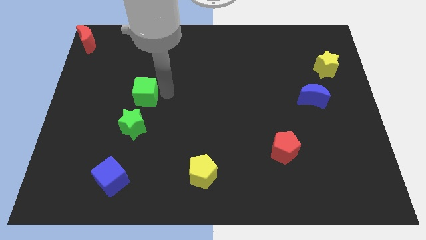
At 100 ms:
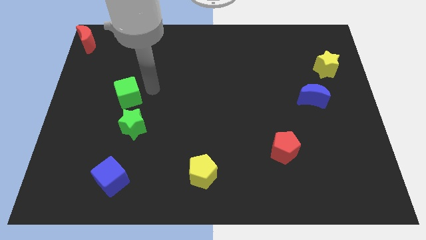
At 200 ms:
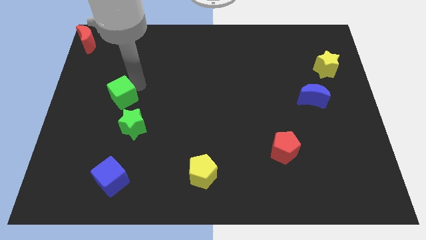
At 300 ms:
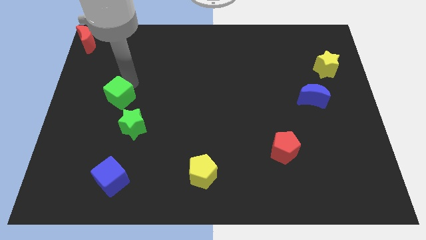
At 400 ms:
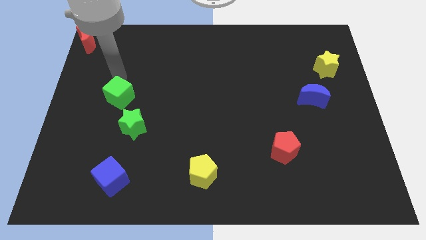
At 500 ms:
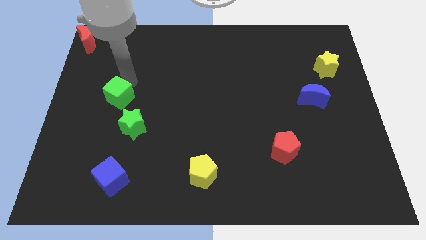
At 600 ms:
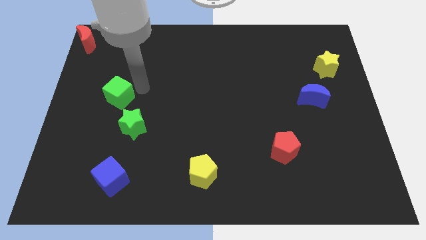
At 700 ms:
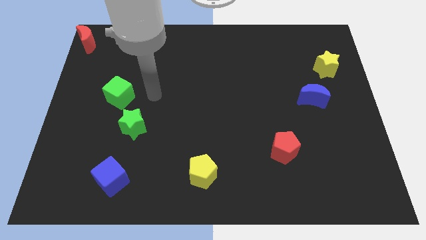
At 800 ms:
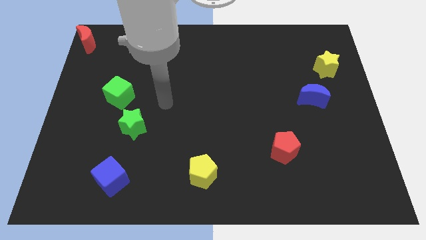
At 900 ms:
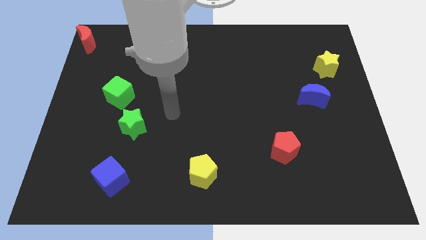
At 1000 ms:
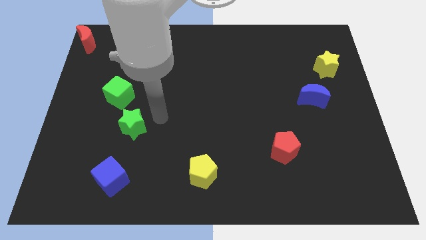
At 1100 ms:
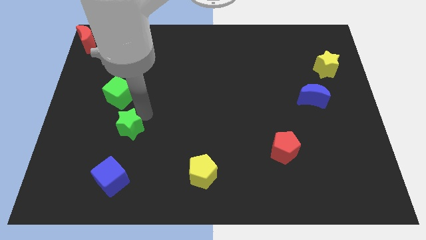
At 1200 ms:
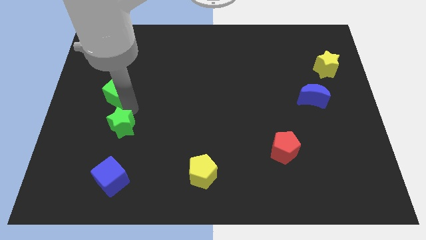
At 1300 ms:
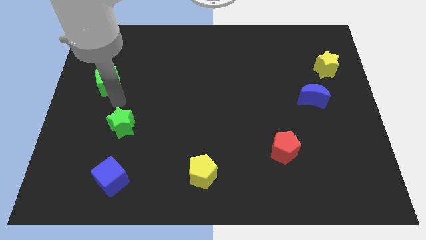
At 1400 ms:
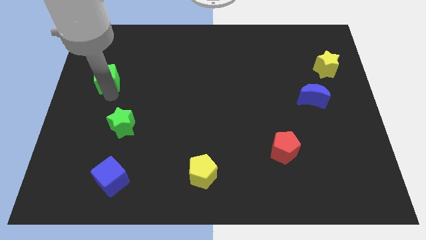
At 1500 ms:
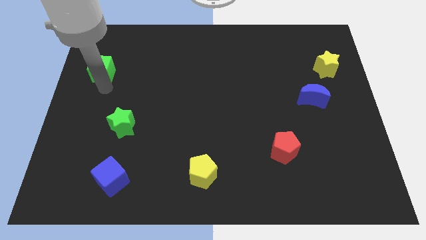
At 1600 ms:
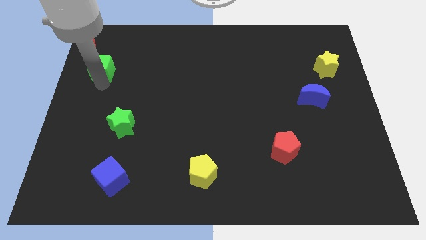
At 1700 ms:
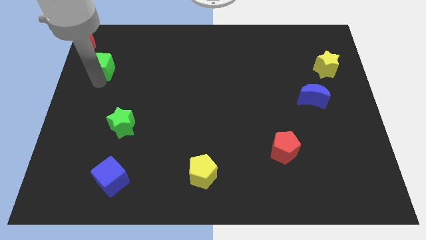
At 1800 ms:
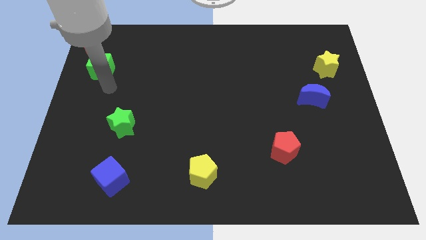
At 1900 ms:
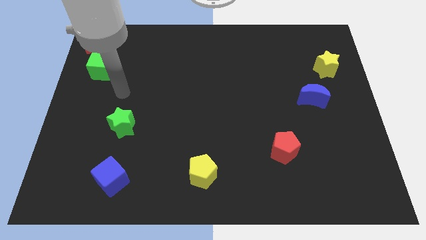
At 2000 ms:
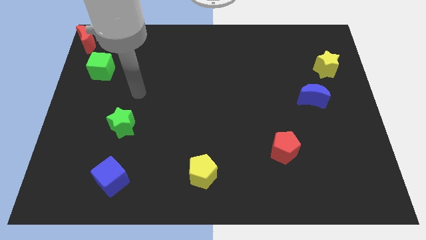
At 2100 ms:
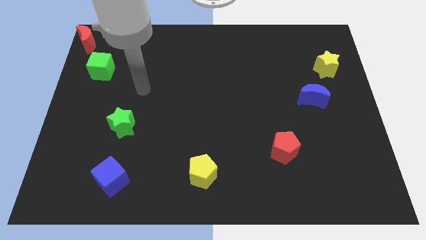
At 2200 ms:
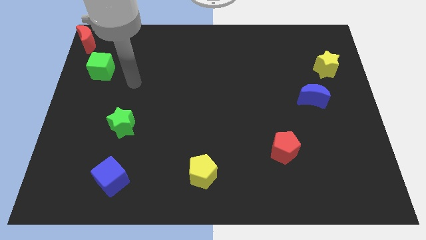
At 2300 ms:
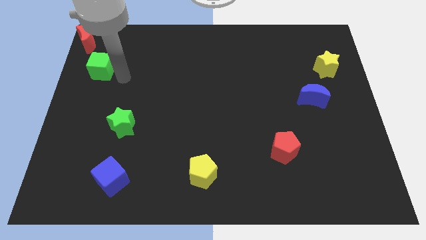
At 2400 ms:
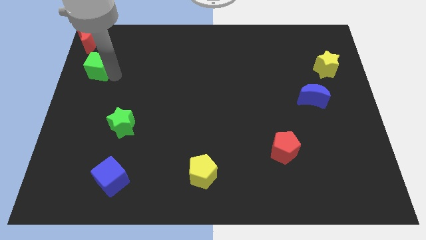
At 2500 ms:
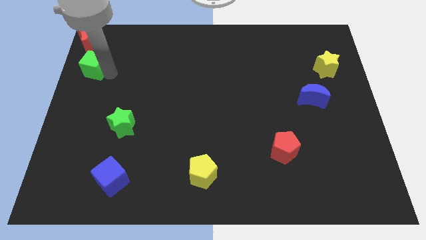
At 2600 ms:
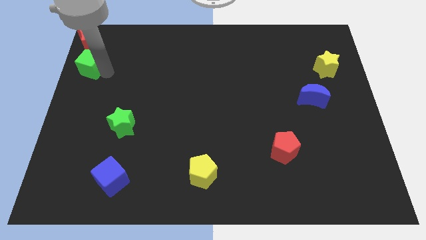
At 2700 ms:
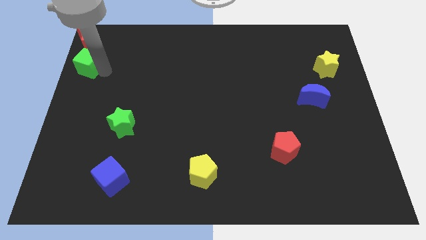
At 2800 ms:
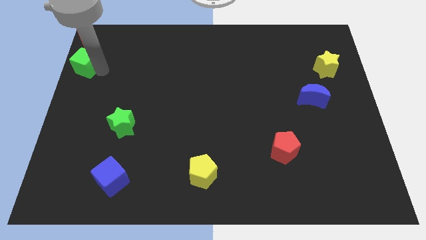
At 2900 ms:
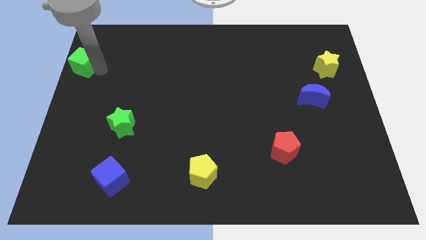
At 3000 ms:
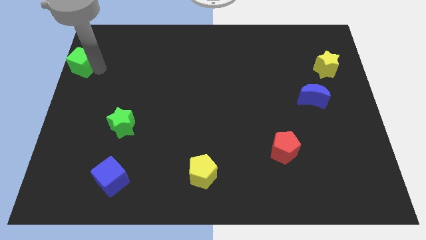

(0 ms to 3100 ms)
place the green cube down to the red moon

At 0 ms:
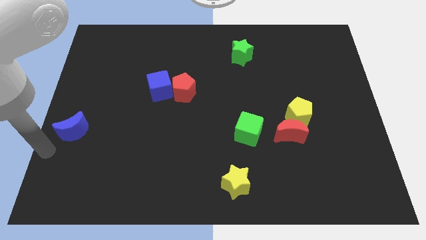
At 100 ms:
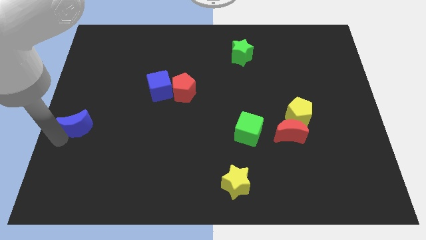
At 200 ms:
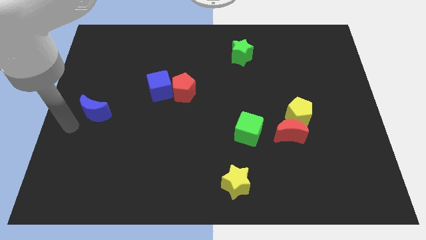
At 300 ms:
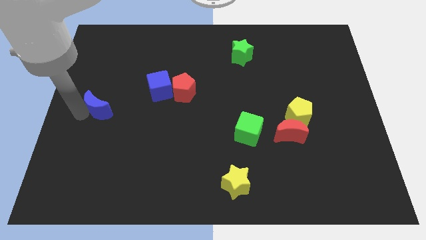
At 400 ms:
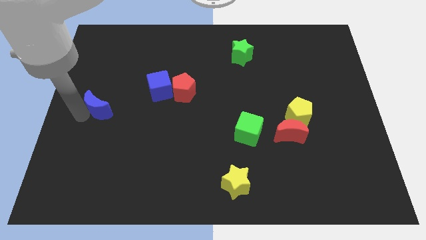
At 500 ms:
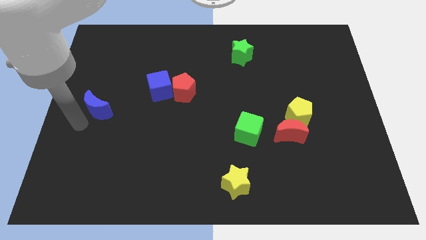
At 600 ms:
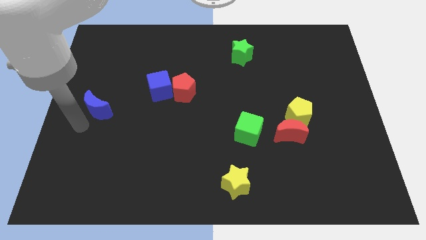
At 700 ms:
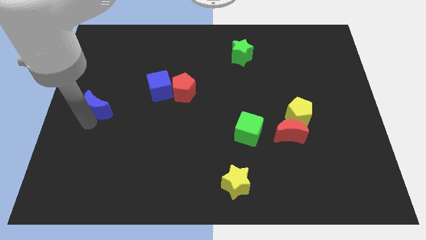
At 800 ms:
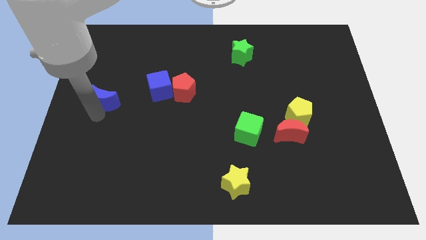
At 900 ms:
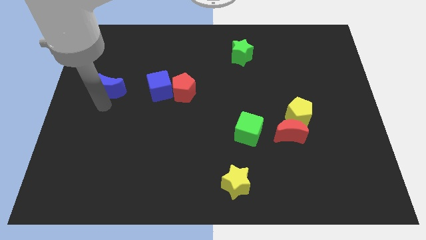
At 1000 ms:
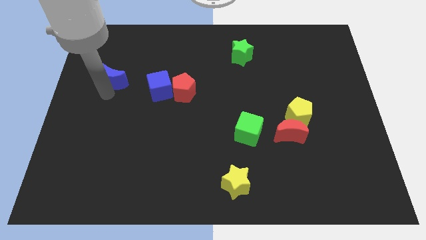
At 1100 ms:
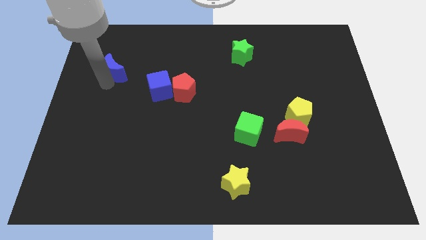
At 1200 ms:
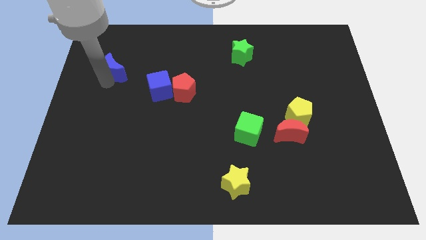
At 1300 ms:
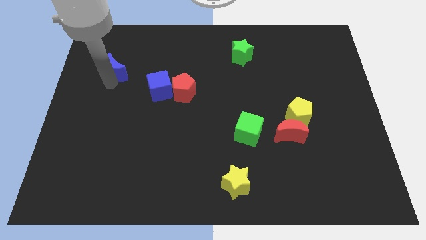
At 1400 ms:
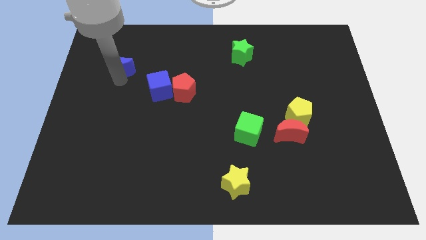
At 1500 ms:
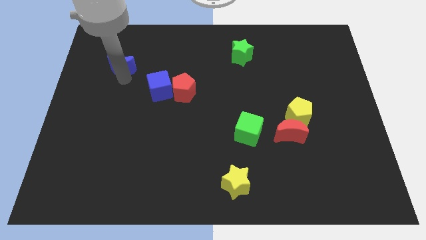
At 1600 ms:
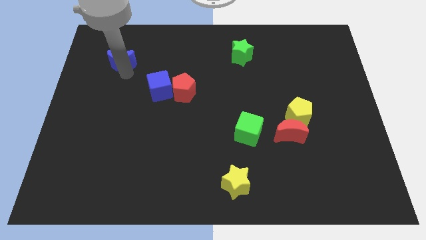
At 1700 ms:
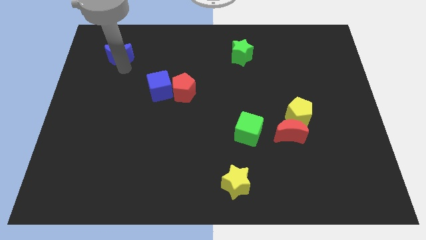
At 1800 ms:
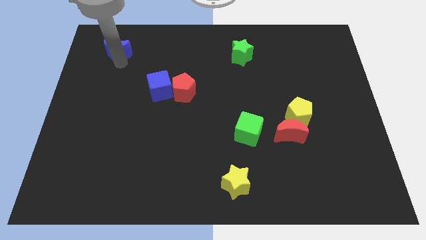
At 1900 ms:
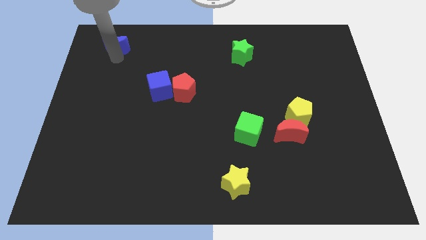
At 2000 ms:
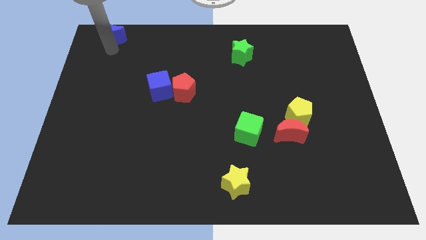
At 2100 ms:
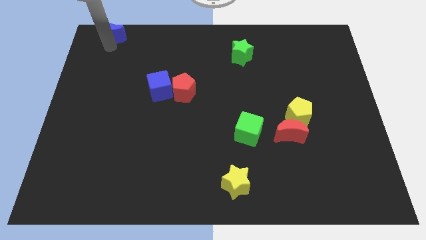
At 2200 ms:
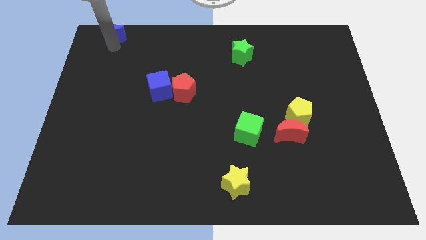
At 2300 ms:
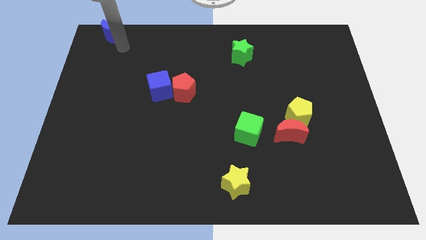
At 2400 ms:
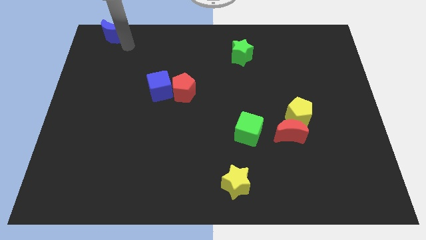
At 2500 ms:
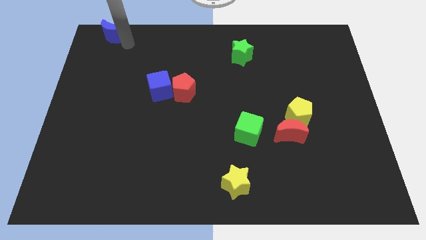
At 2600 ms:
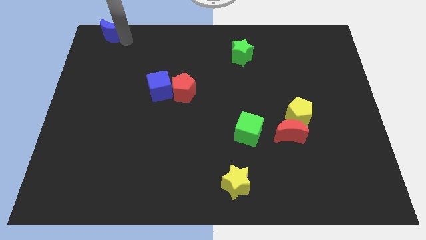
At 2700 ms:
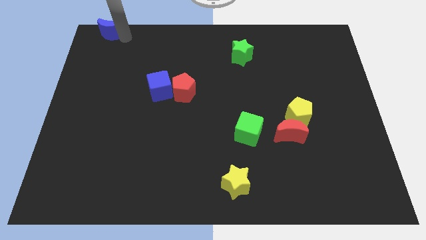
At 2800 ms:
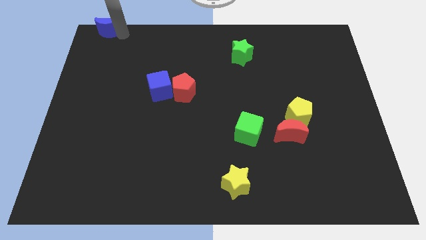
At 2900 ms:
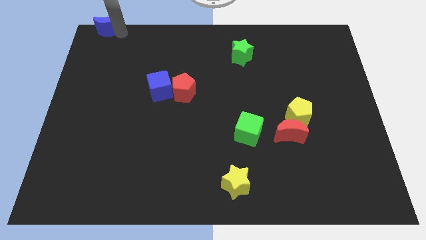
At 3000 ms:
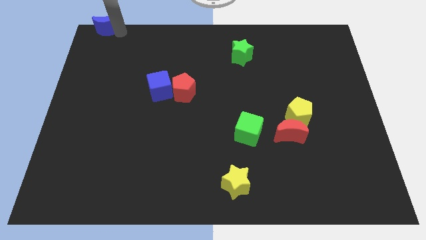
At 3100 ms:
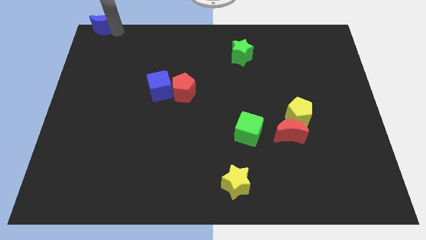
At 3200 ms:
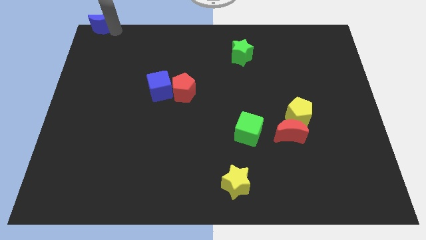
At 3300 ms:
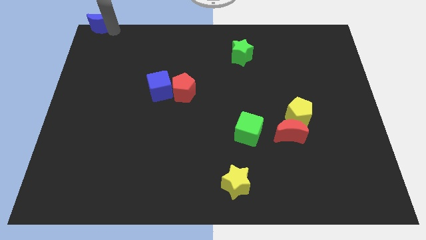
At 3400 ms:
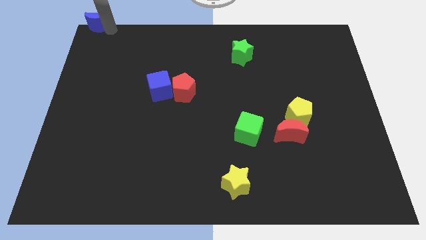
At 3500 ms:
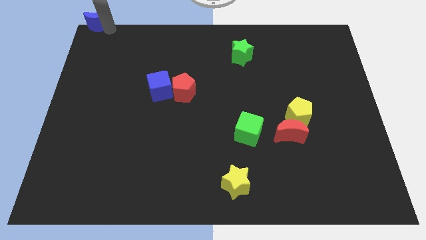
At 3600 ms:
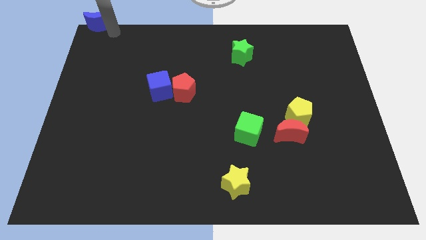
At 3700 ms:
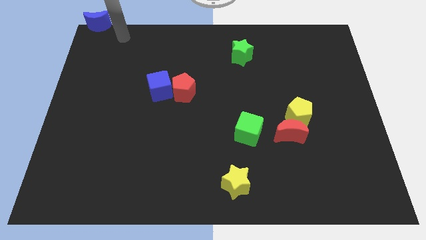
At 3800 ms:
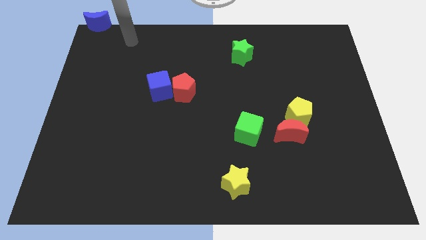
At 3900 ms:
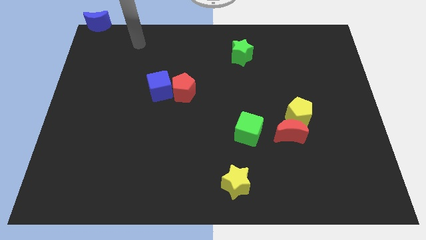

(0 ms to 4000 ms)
place the blue moon to the top left corner of the board

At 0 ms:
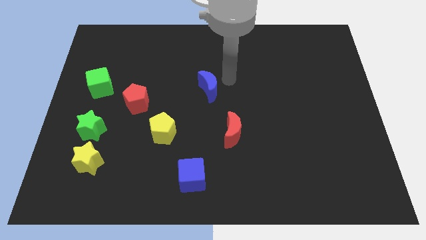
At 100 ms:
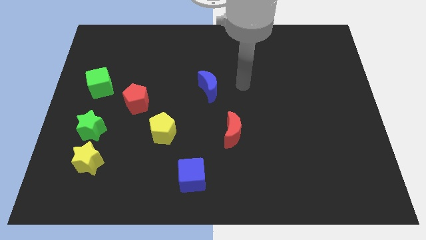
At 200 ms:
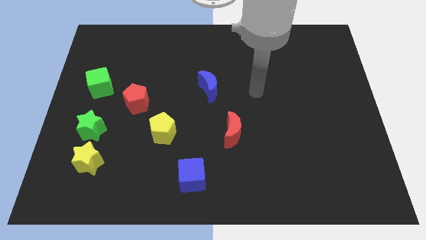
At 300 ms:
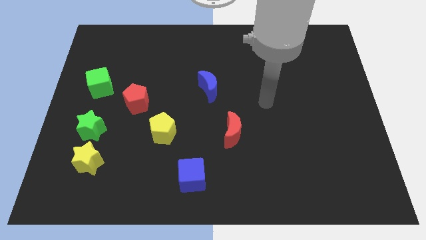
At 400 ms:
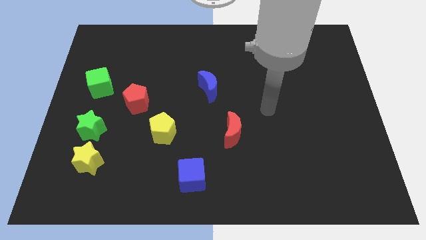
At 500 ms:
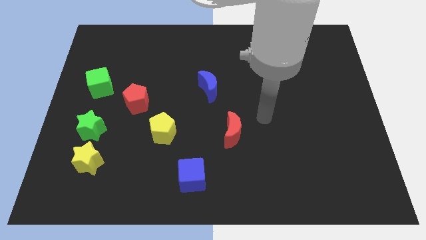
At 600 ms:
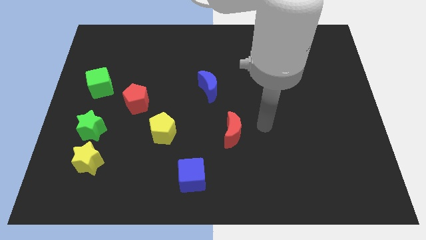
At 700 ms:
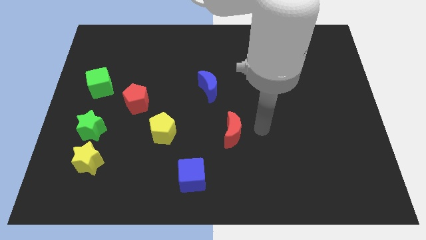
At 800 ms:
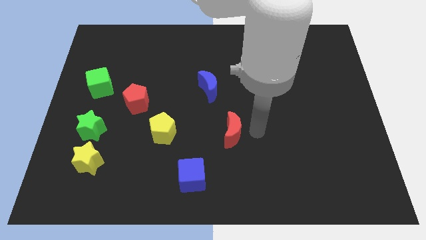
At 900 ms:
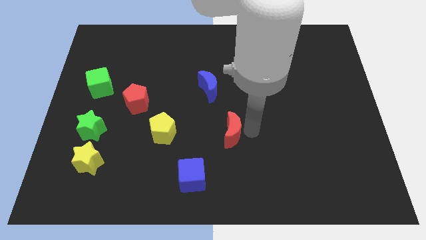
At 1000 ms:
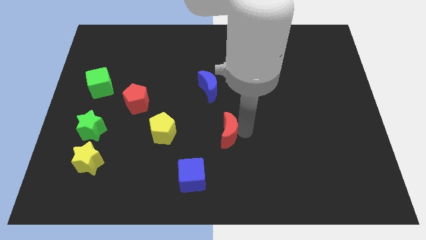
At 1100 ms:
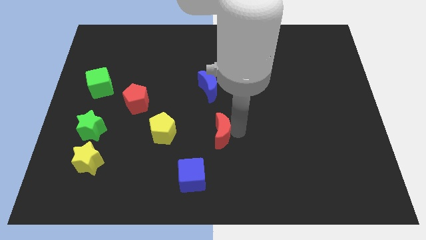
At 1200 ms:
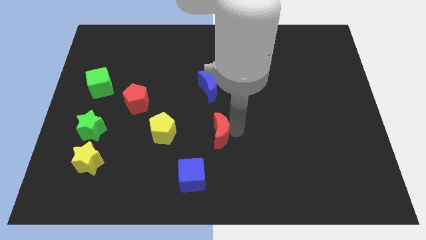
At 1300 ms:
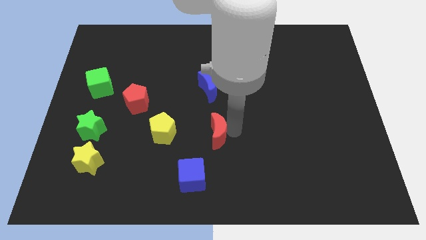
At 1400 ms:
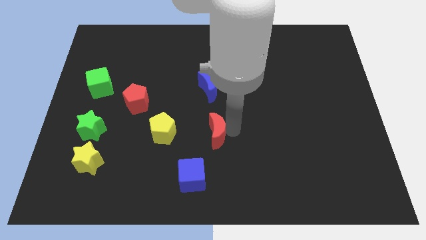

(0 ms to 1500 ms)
make a touch to red crescent parallel to the blue moon
